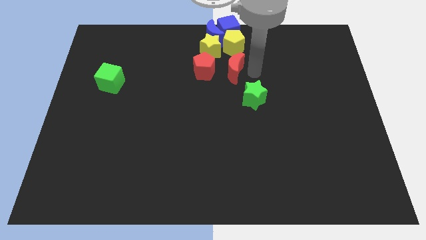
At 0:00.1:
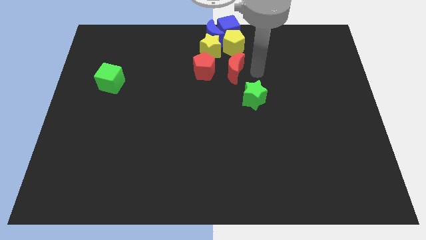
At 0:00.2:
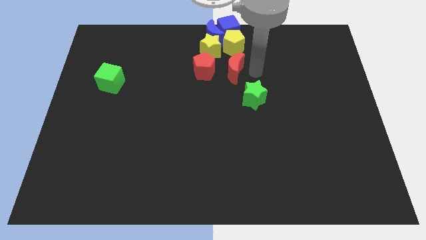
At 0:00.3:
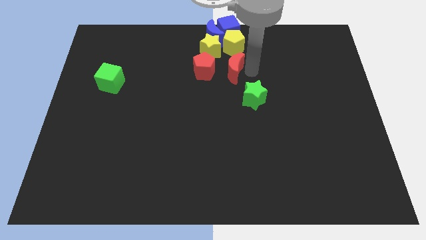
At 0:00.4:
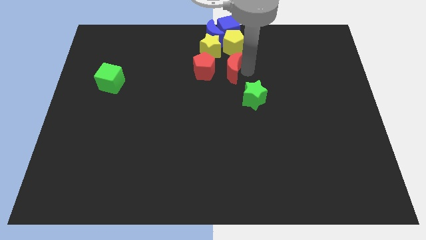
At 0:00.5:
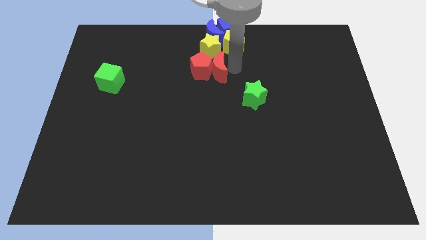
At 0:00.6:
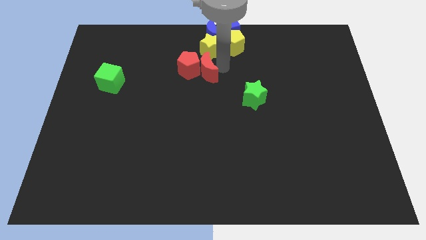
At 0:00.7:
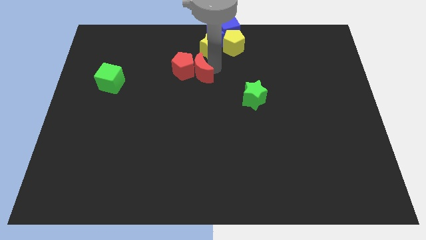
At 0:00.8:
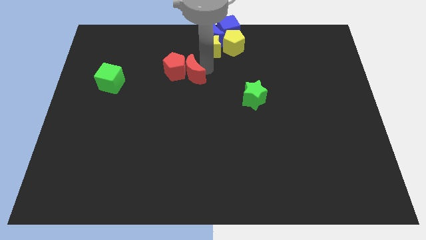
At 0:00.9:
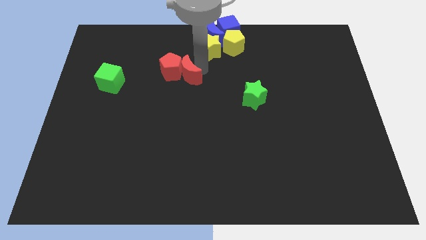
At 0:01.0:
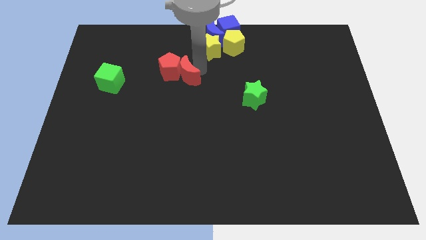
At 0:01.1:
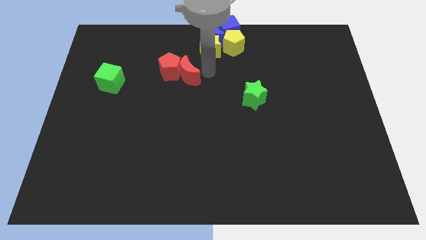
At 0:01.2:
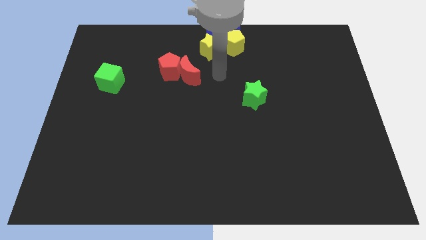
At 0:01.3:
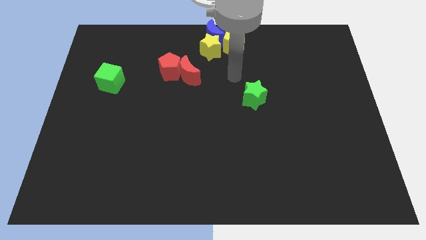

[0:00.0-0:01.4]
push the red moon into the red pentagon

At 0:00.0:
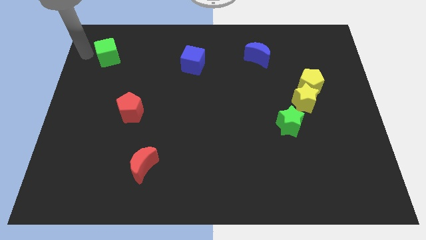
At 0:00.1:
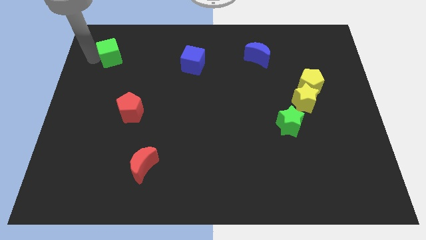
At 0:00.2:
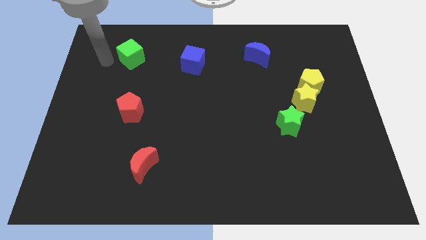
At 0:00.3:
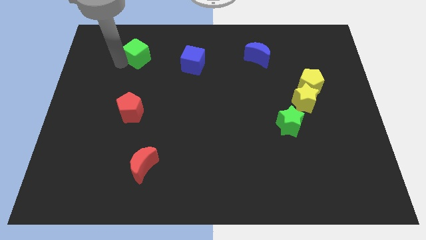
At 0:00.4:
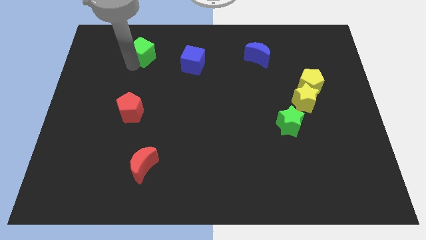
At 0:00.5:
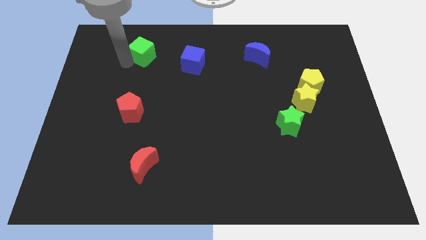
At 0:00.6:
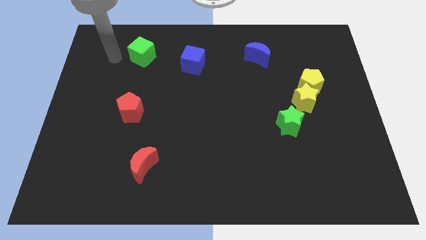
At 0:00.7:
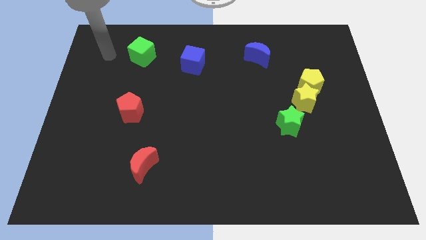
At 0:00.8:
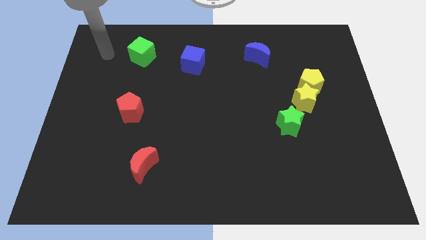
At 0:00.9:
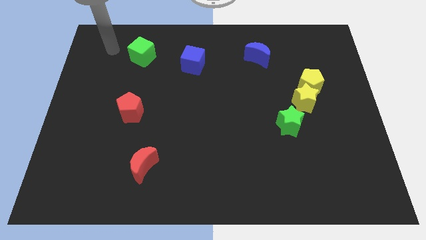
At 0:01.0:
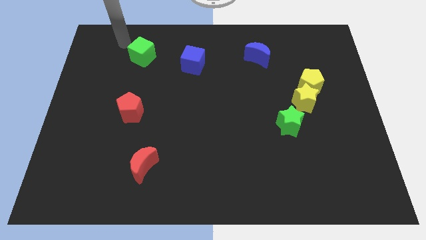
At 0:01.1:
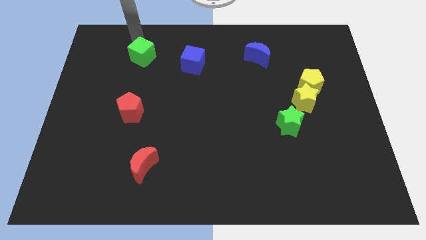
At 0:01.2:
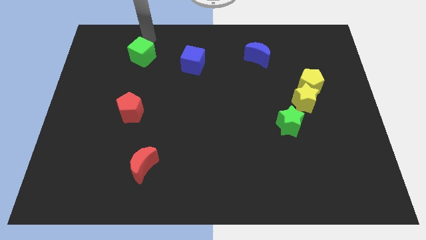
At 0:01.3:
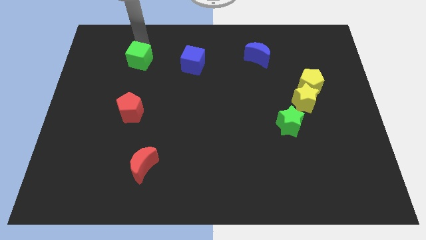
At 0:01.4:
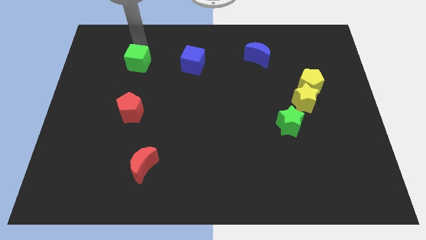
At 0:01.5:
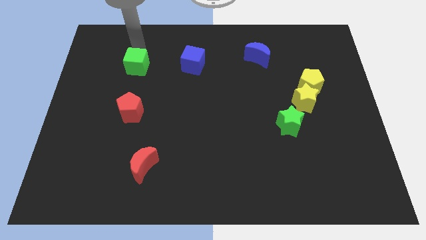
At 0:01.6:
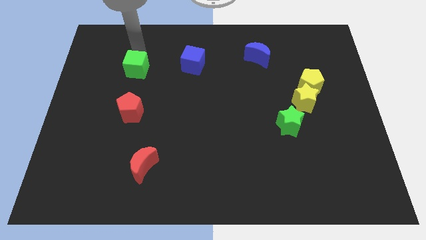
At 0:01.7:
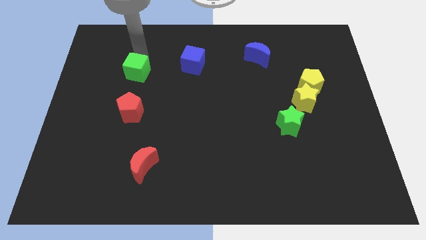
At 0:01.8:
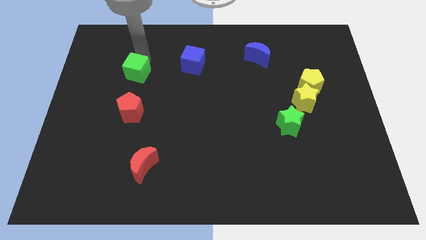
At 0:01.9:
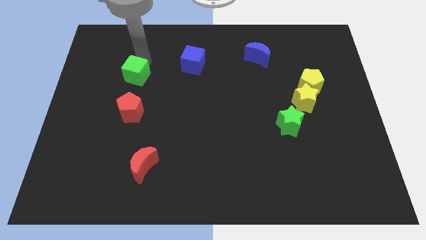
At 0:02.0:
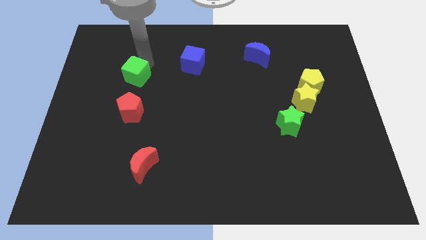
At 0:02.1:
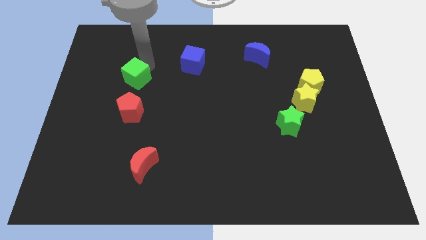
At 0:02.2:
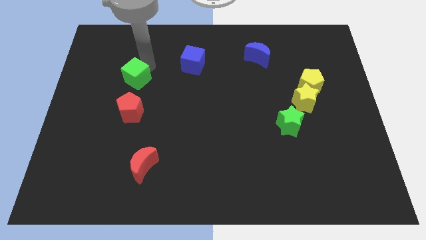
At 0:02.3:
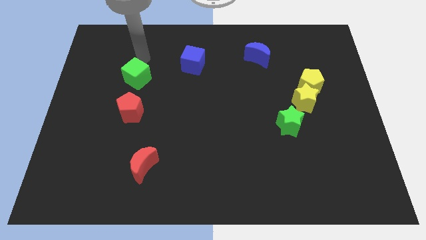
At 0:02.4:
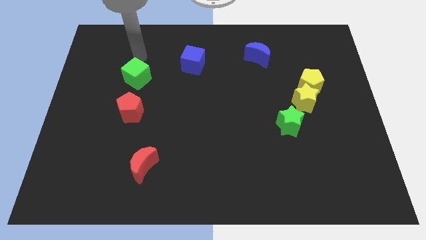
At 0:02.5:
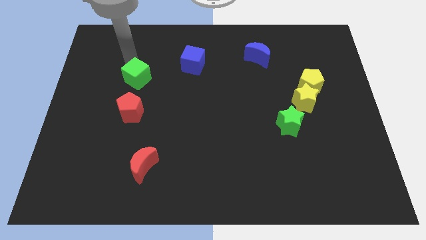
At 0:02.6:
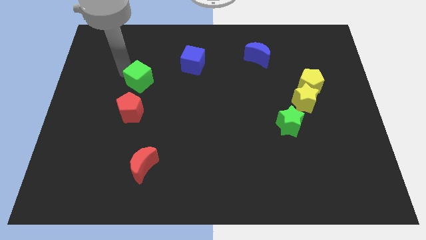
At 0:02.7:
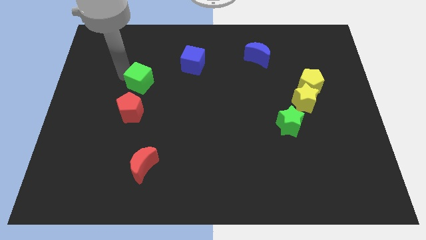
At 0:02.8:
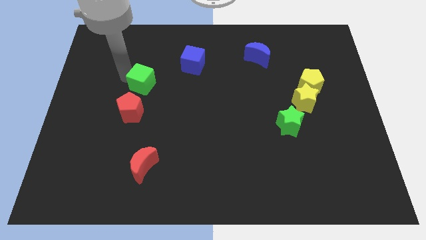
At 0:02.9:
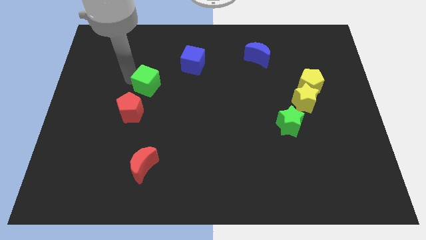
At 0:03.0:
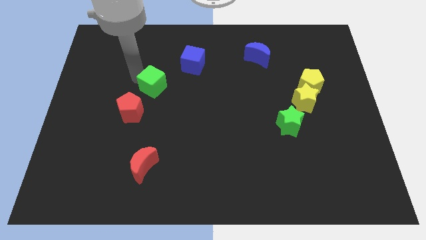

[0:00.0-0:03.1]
place the green cube slightly to the top right side of the red pentagon

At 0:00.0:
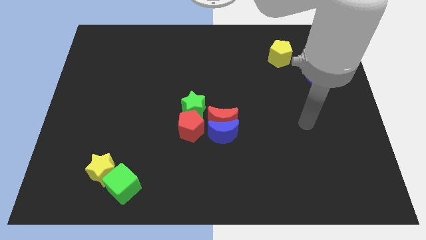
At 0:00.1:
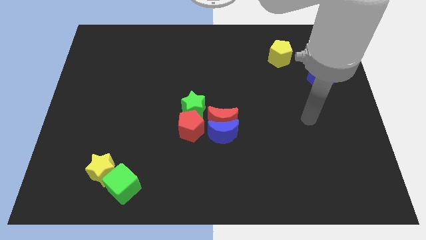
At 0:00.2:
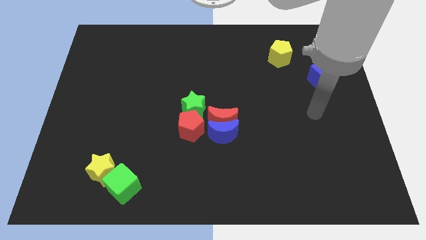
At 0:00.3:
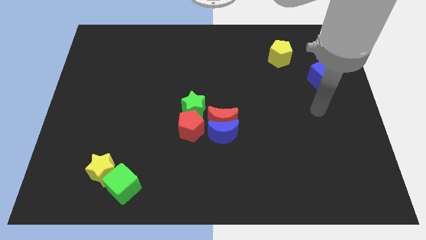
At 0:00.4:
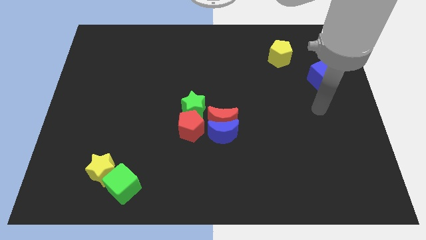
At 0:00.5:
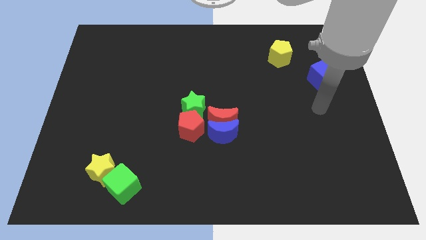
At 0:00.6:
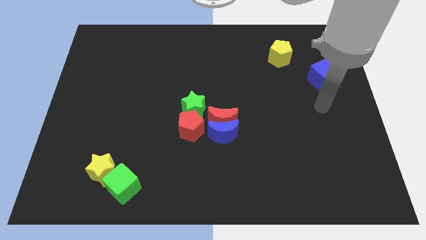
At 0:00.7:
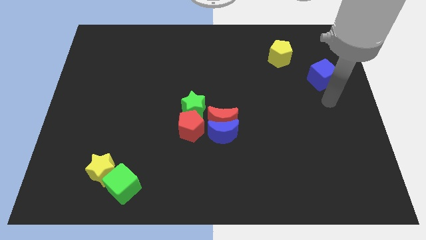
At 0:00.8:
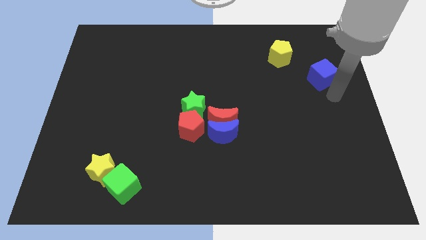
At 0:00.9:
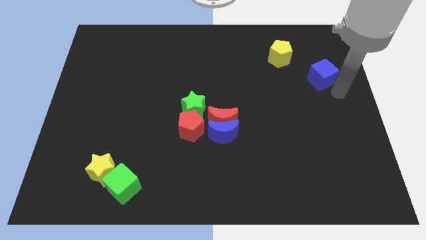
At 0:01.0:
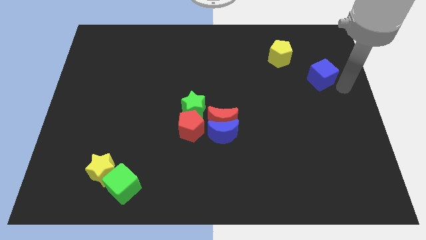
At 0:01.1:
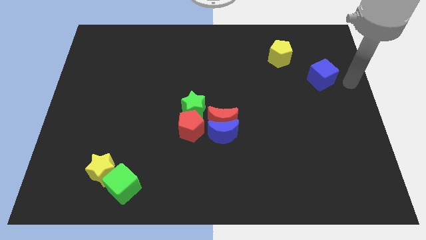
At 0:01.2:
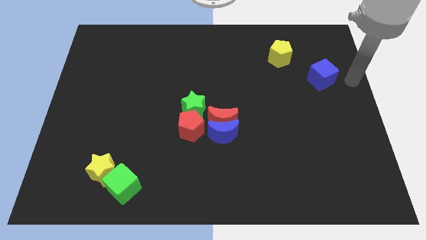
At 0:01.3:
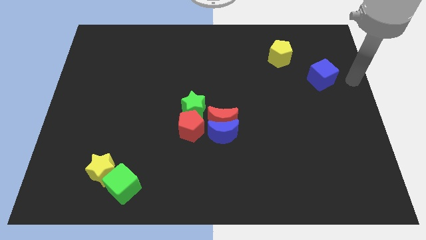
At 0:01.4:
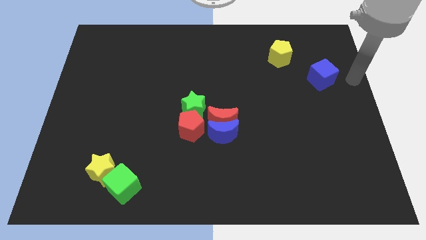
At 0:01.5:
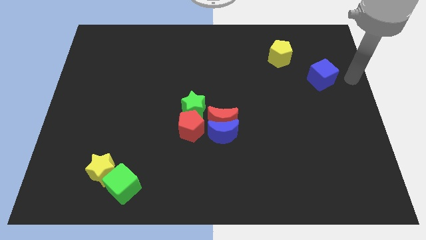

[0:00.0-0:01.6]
move the arm towards the blue cube

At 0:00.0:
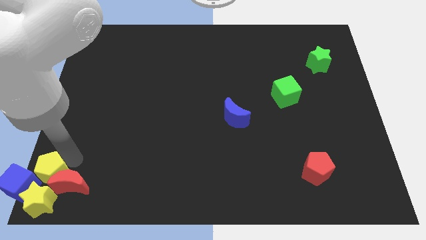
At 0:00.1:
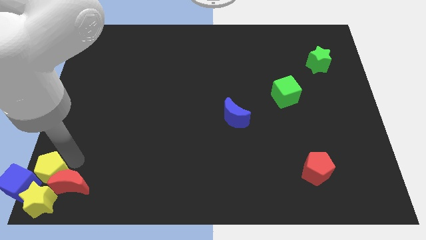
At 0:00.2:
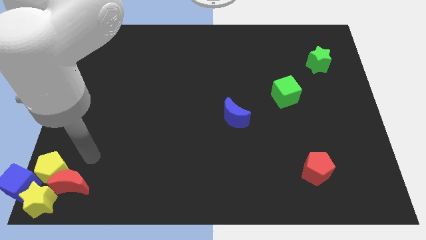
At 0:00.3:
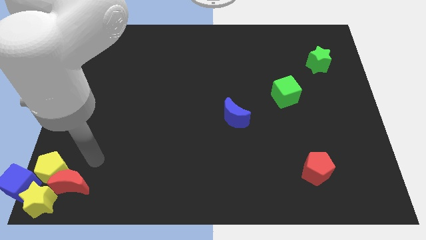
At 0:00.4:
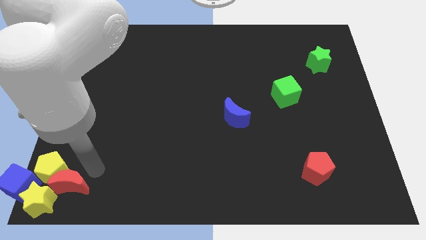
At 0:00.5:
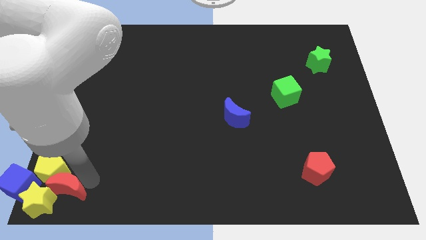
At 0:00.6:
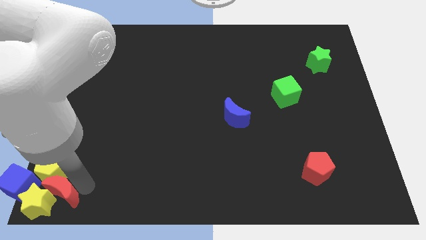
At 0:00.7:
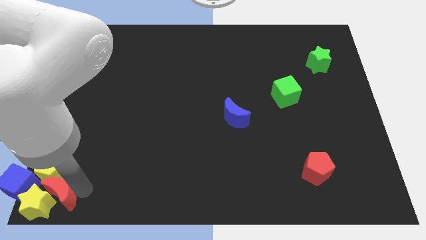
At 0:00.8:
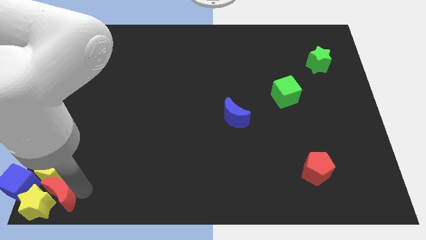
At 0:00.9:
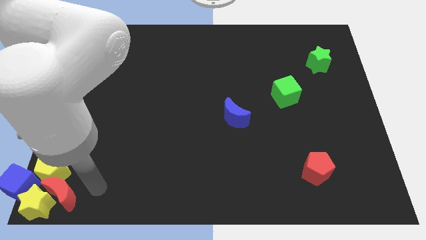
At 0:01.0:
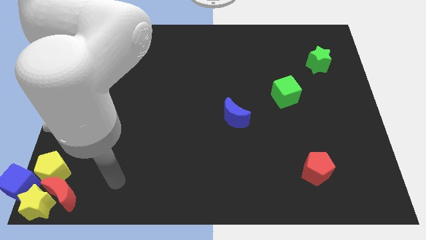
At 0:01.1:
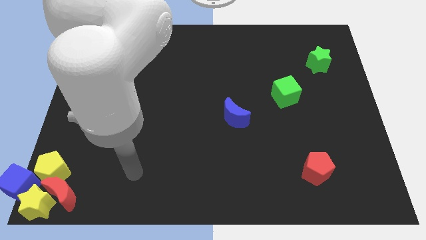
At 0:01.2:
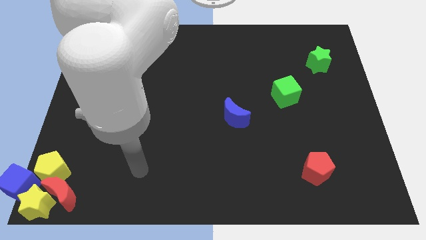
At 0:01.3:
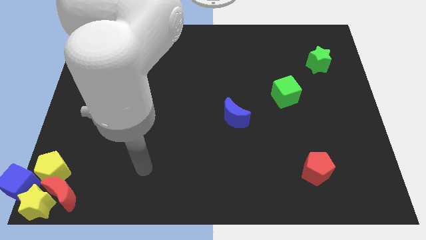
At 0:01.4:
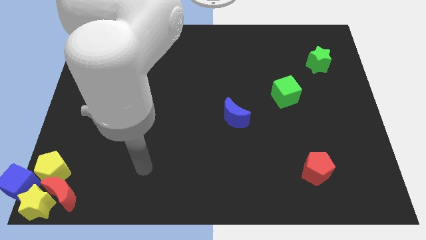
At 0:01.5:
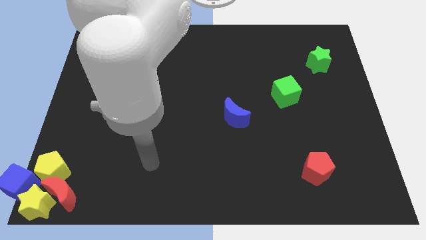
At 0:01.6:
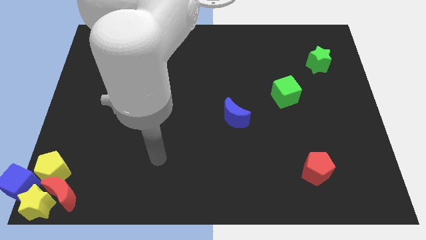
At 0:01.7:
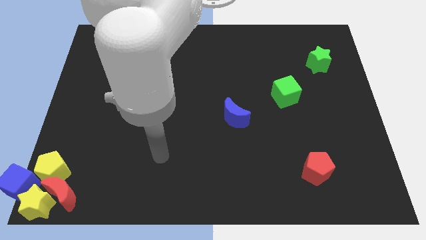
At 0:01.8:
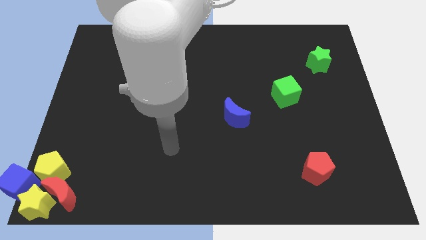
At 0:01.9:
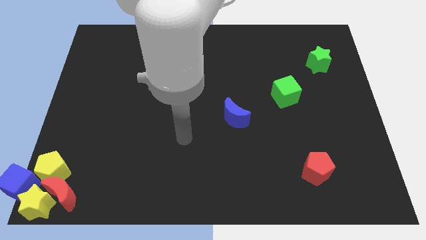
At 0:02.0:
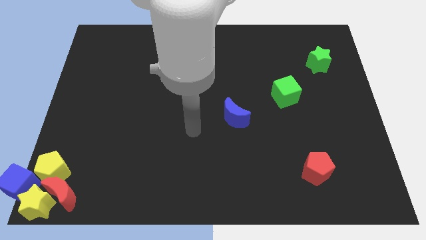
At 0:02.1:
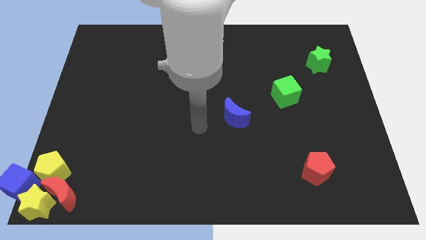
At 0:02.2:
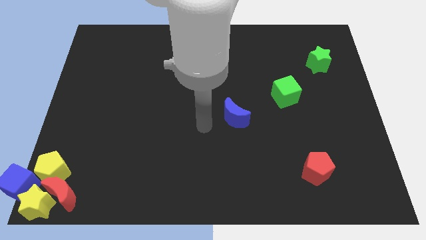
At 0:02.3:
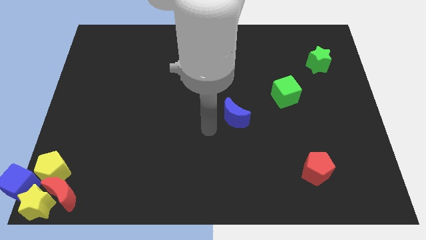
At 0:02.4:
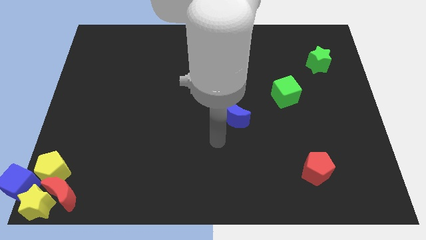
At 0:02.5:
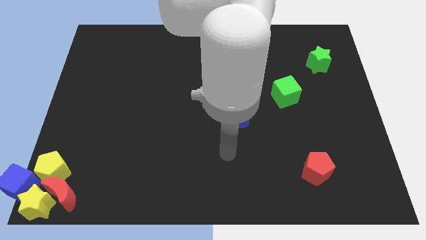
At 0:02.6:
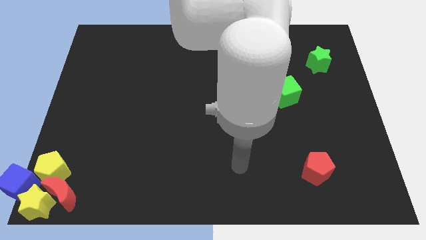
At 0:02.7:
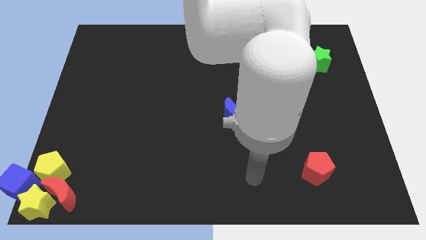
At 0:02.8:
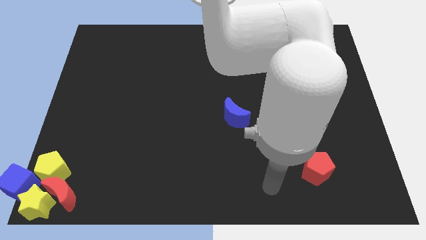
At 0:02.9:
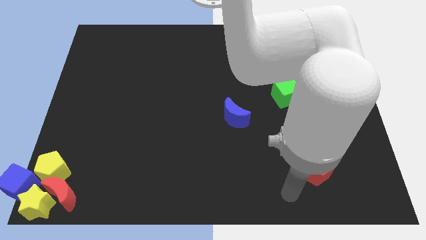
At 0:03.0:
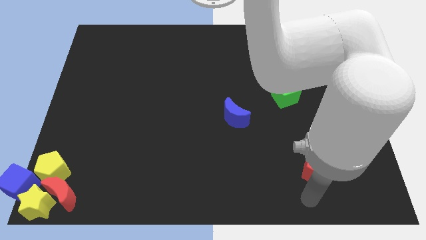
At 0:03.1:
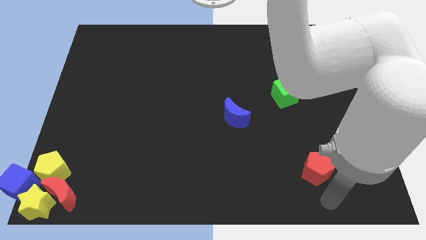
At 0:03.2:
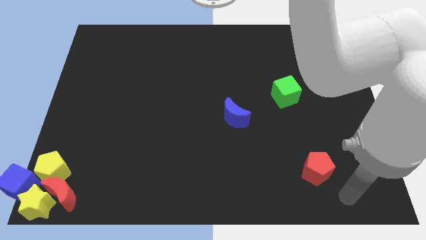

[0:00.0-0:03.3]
move your arm to the bottom of red pentagon
